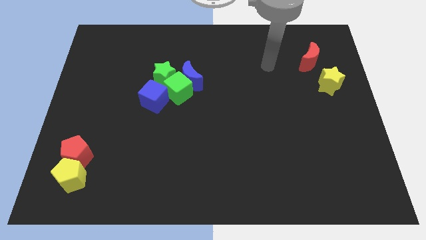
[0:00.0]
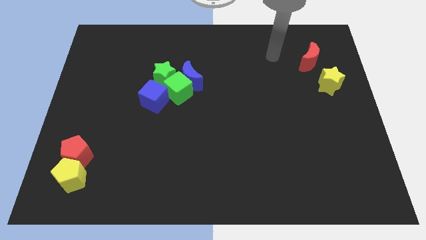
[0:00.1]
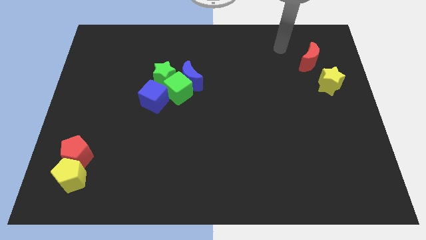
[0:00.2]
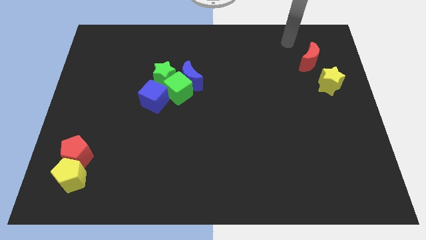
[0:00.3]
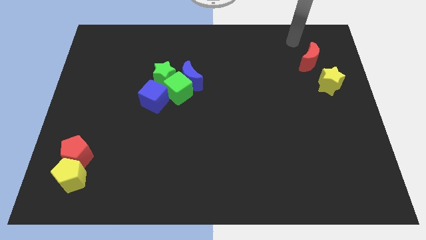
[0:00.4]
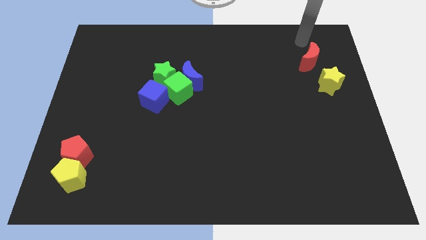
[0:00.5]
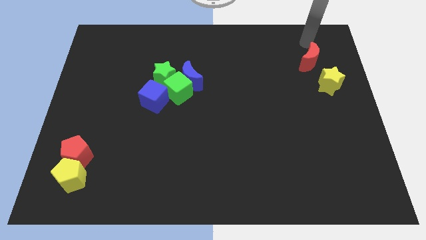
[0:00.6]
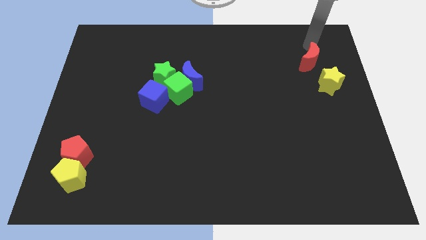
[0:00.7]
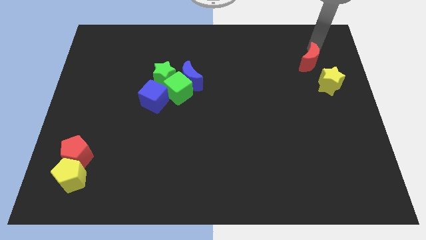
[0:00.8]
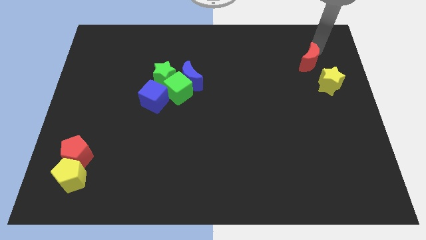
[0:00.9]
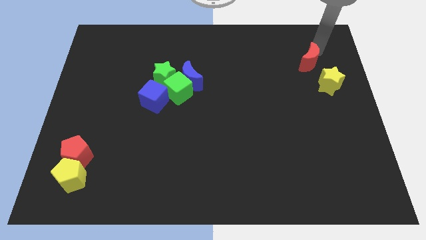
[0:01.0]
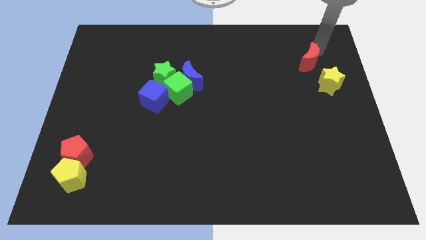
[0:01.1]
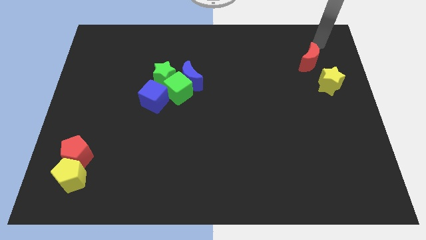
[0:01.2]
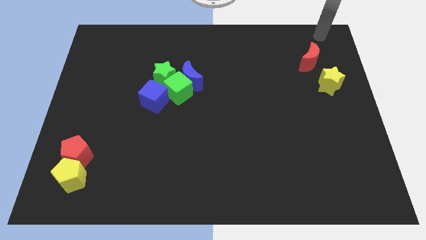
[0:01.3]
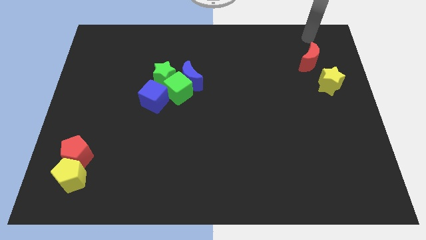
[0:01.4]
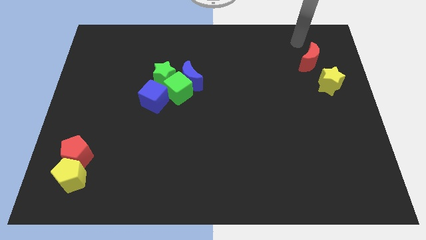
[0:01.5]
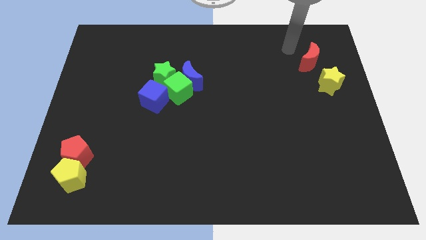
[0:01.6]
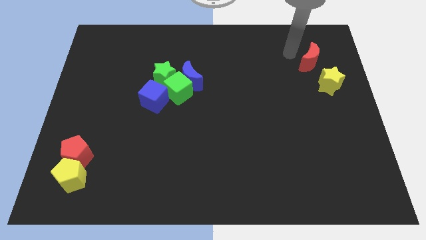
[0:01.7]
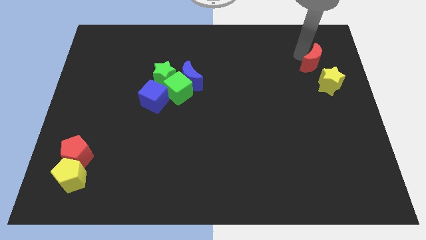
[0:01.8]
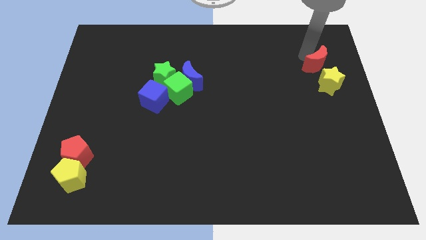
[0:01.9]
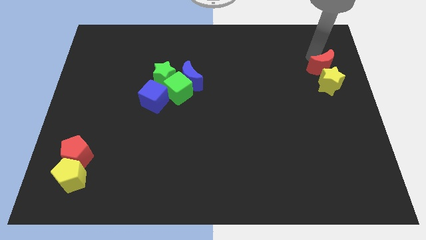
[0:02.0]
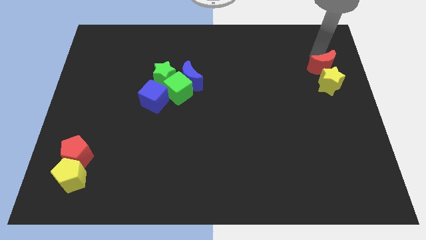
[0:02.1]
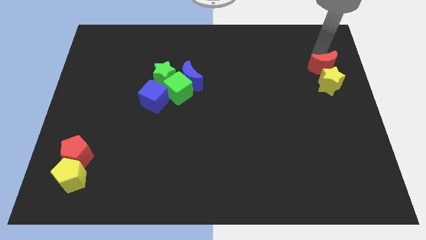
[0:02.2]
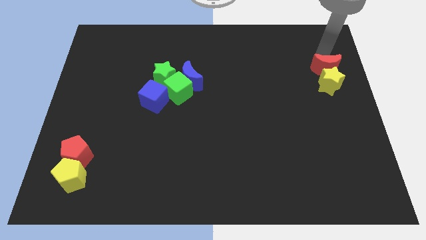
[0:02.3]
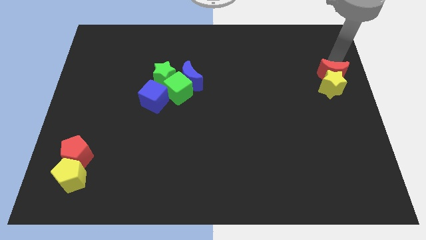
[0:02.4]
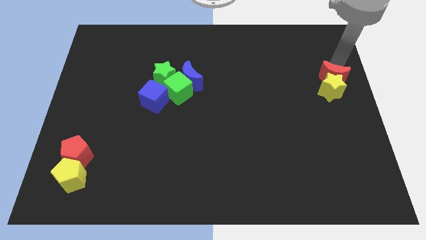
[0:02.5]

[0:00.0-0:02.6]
move the red crescent to the top of the yellow star

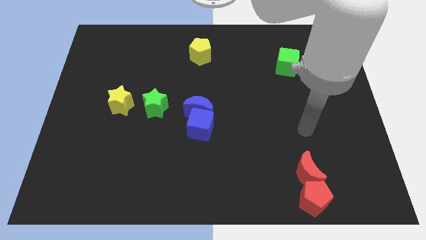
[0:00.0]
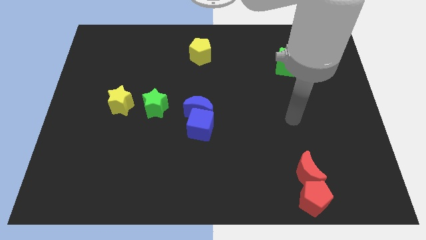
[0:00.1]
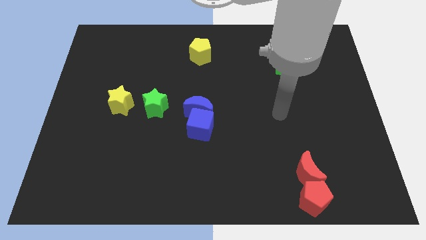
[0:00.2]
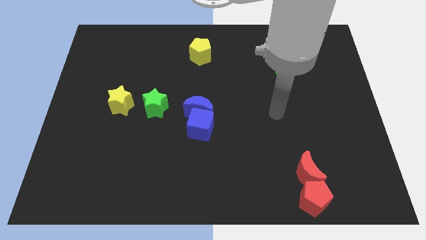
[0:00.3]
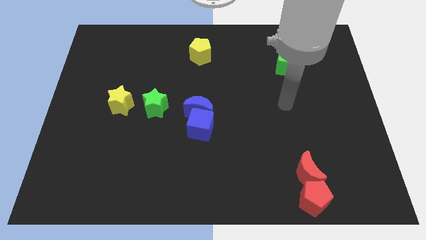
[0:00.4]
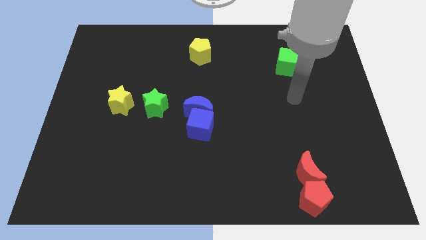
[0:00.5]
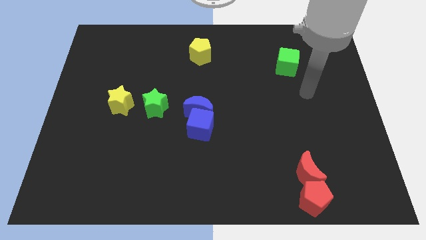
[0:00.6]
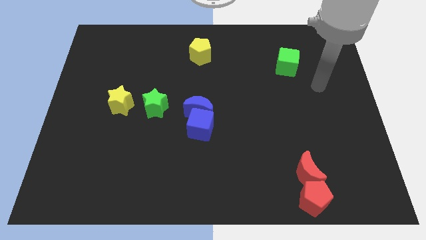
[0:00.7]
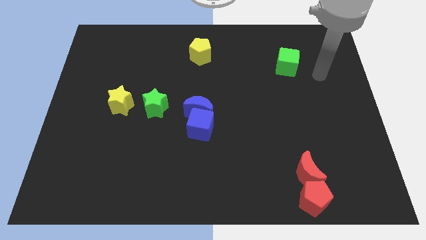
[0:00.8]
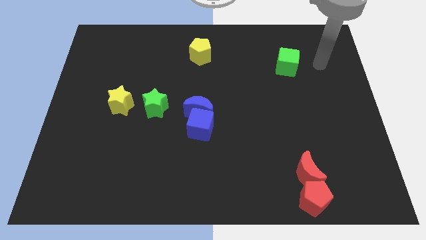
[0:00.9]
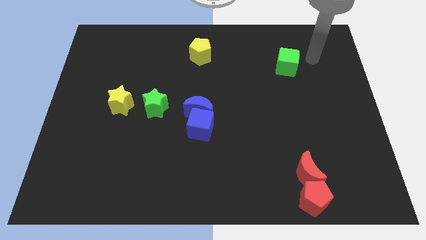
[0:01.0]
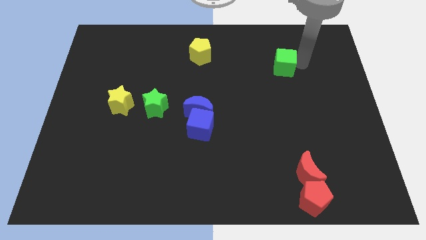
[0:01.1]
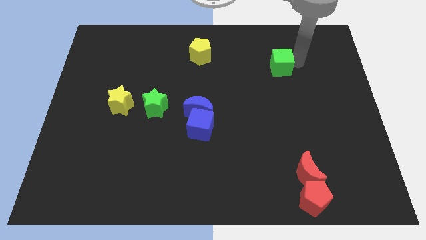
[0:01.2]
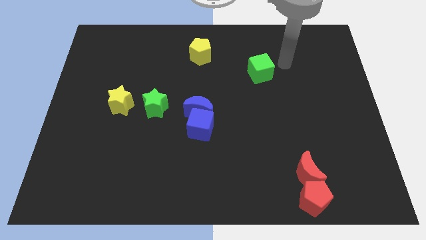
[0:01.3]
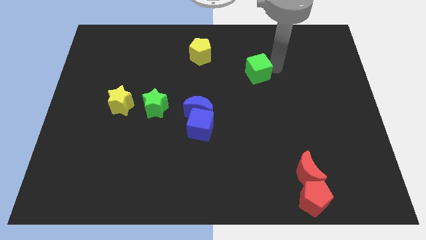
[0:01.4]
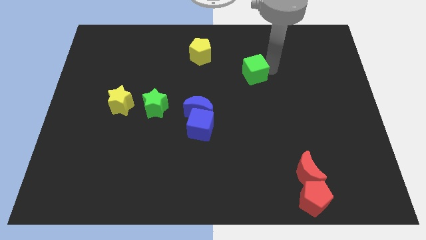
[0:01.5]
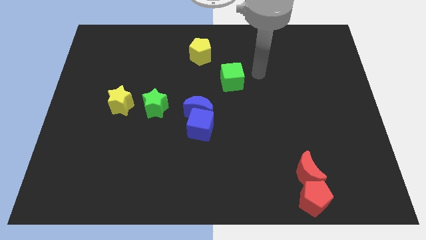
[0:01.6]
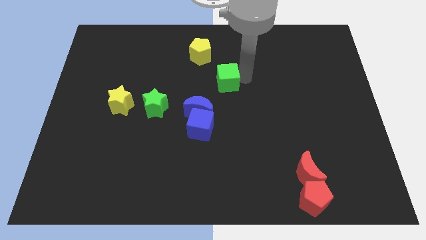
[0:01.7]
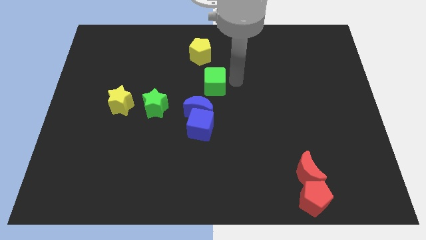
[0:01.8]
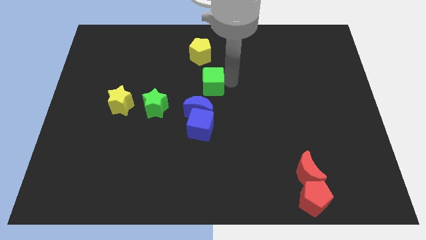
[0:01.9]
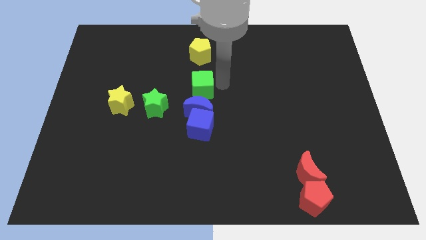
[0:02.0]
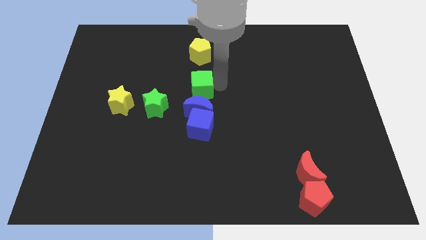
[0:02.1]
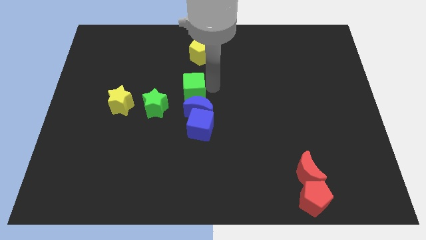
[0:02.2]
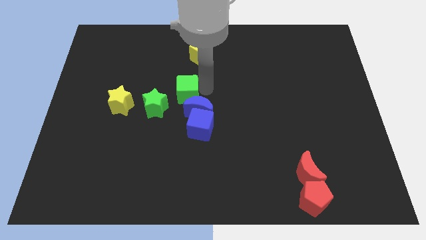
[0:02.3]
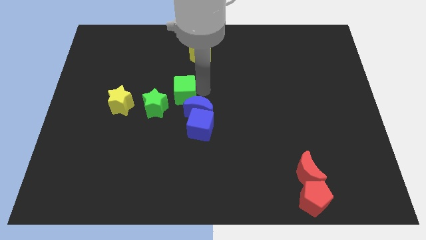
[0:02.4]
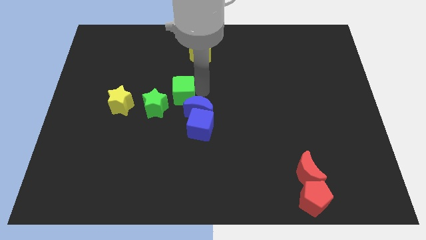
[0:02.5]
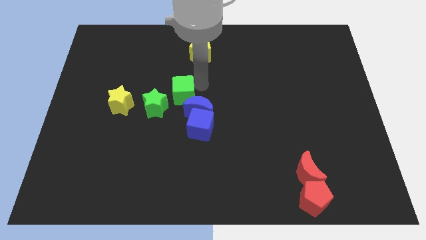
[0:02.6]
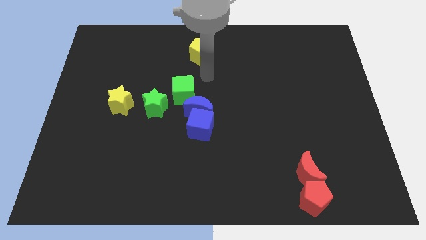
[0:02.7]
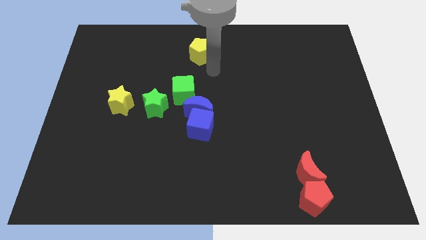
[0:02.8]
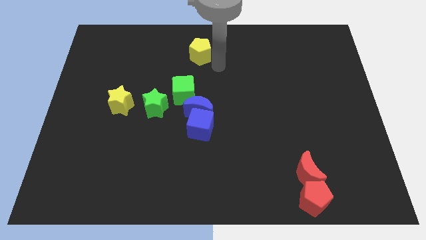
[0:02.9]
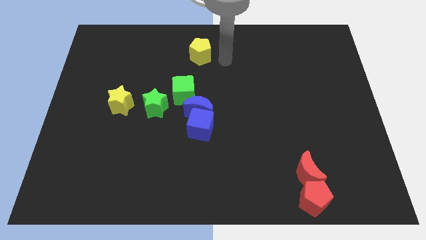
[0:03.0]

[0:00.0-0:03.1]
place the green cube diagonal top right to green star

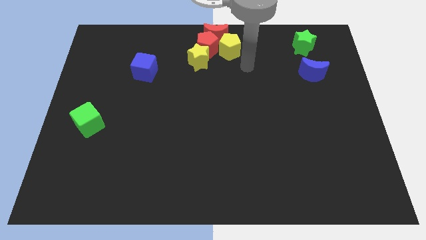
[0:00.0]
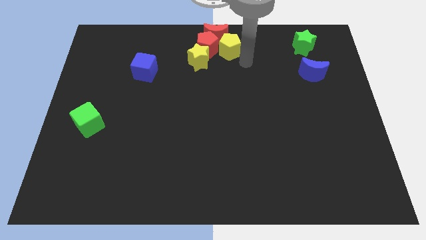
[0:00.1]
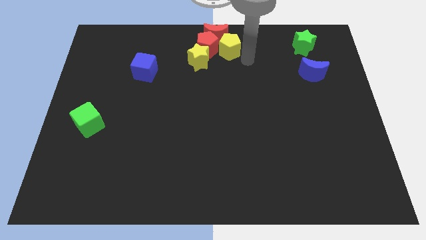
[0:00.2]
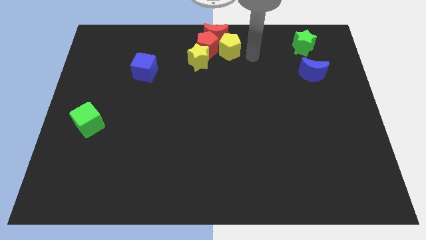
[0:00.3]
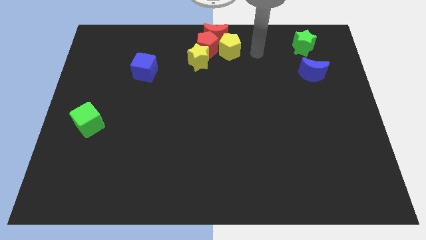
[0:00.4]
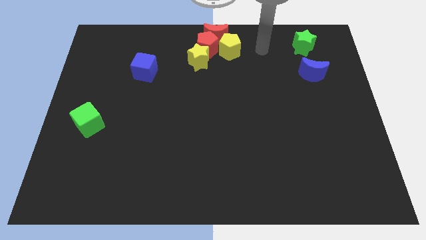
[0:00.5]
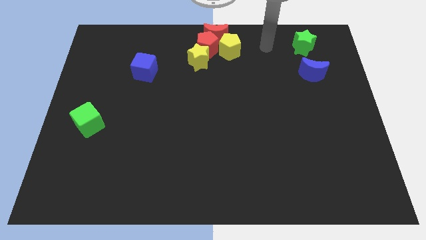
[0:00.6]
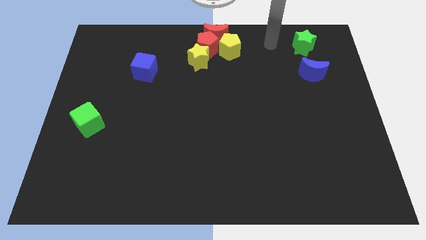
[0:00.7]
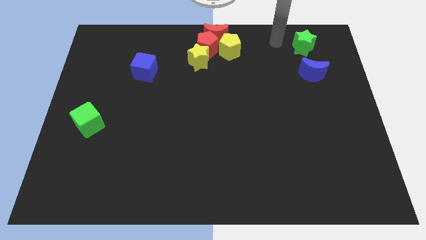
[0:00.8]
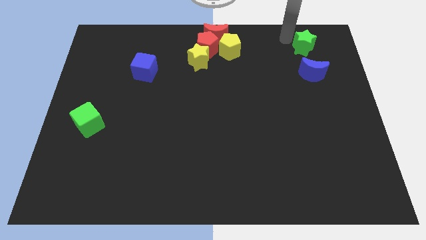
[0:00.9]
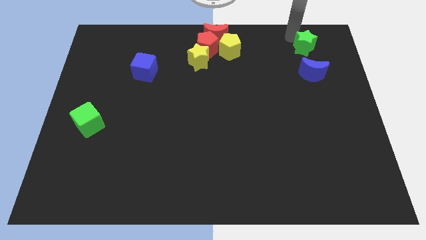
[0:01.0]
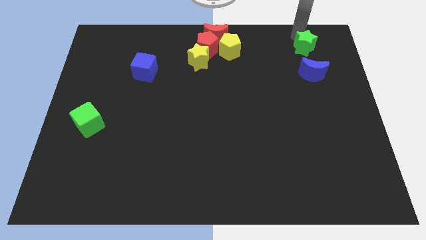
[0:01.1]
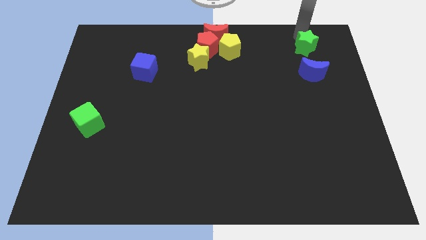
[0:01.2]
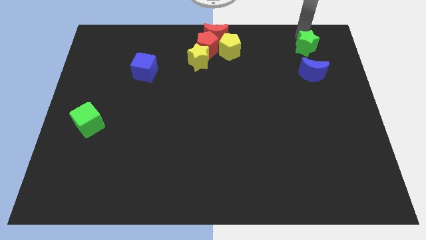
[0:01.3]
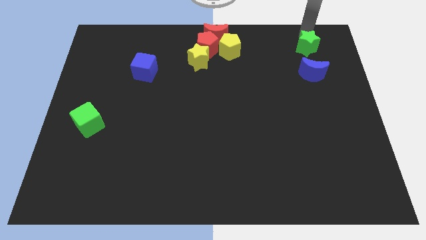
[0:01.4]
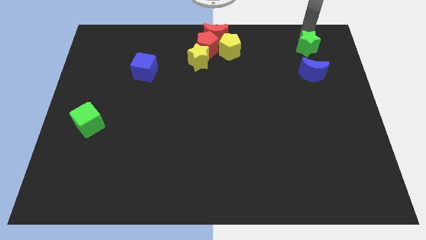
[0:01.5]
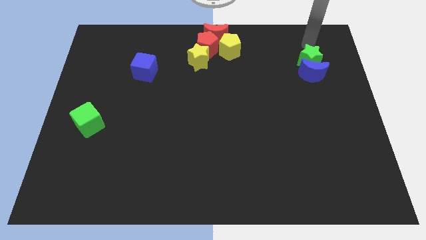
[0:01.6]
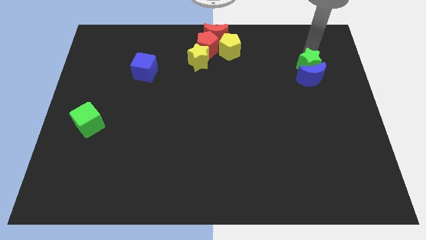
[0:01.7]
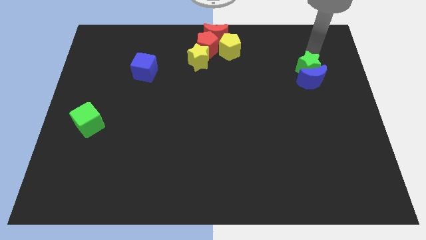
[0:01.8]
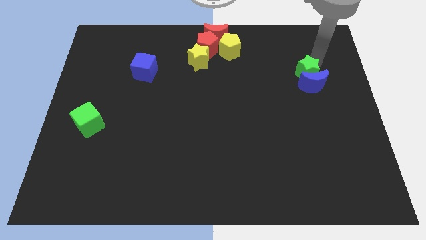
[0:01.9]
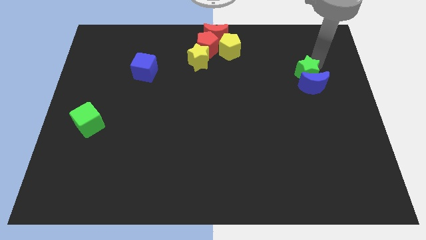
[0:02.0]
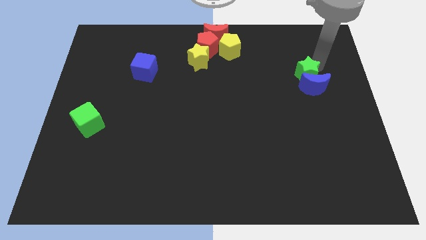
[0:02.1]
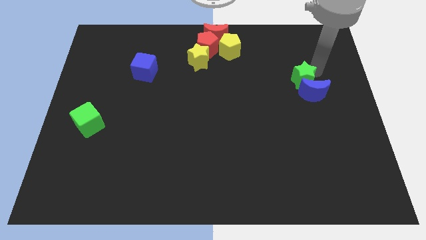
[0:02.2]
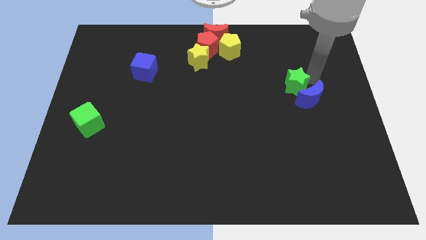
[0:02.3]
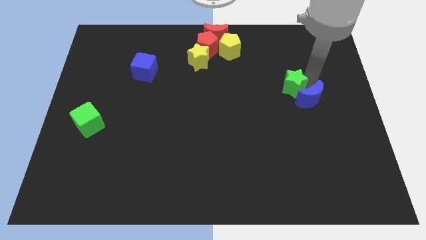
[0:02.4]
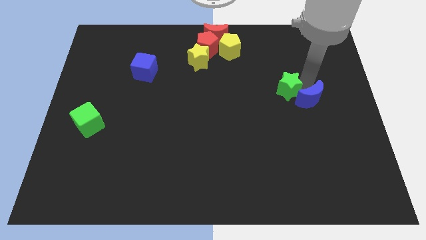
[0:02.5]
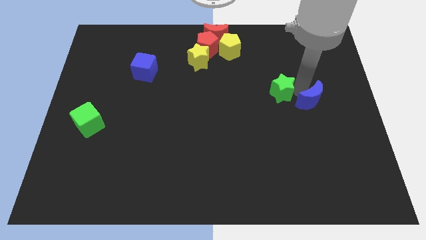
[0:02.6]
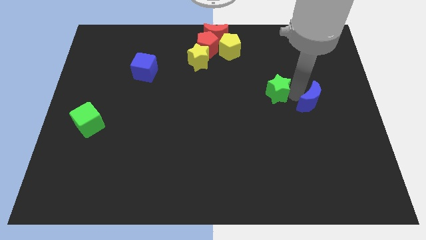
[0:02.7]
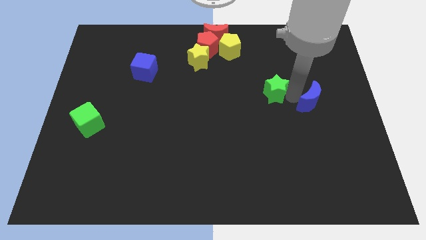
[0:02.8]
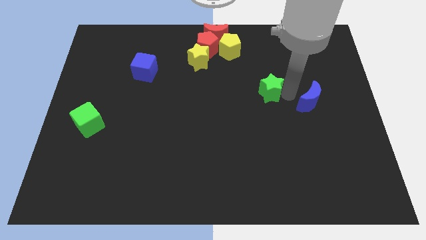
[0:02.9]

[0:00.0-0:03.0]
put the green star diagonally at the bottom right of the yellow pentagon

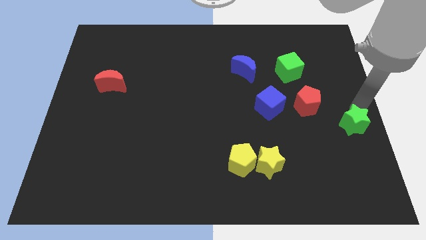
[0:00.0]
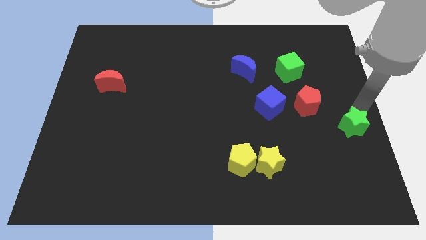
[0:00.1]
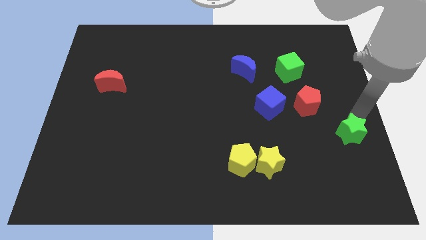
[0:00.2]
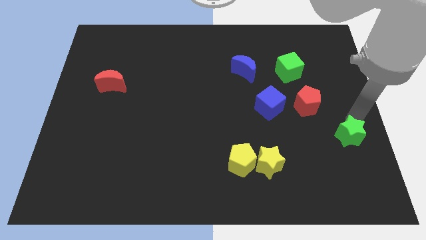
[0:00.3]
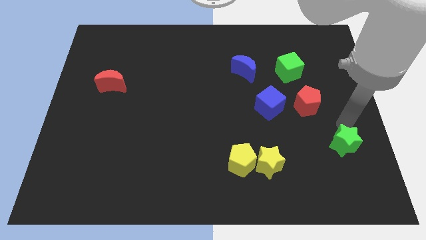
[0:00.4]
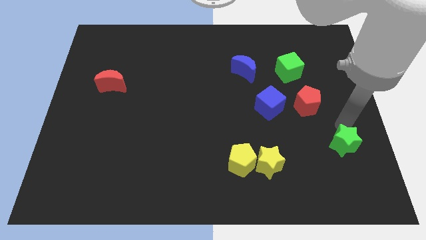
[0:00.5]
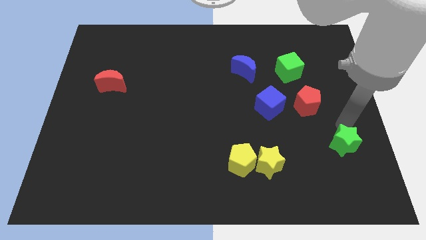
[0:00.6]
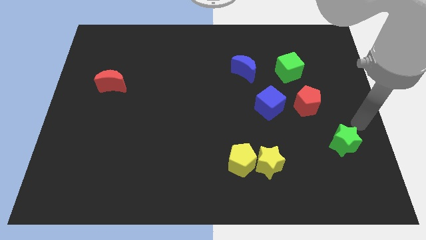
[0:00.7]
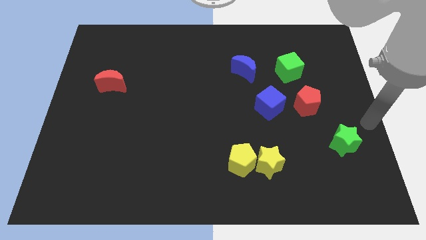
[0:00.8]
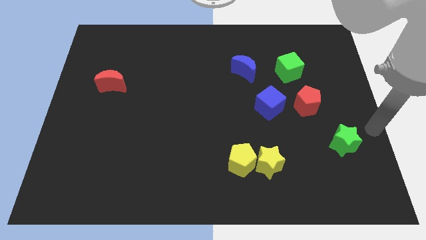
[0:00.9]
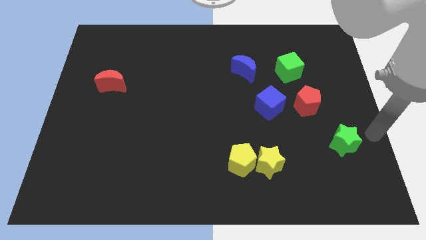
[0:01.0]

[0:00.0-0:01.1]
push green star slightly down
